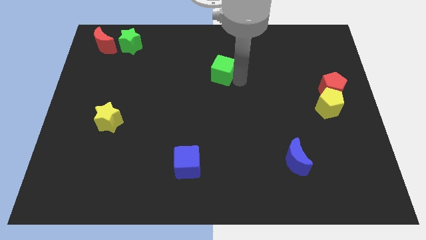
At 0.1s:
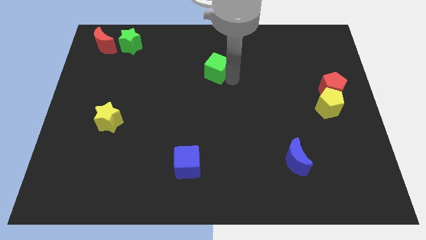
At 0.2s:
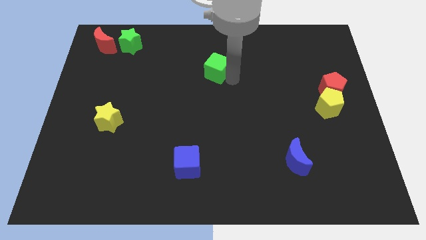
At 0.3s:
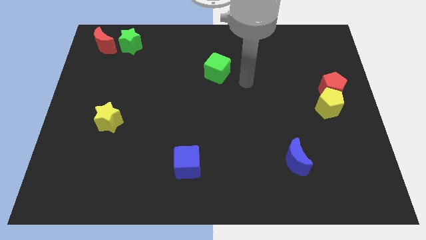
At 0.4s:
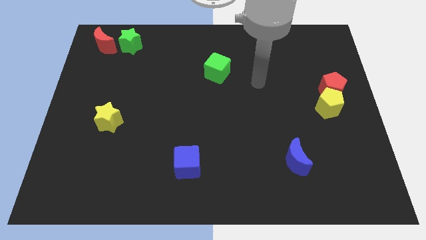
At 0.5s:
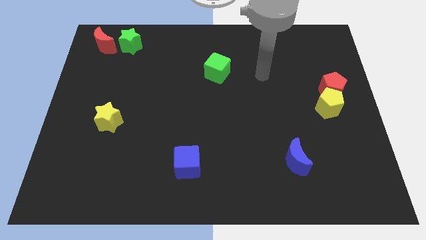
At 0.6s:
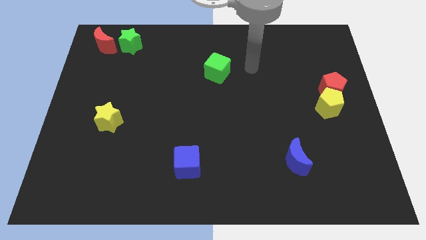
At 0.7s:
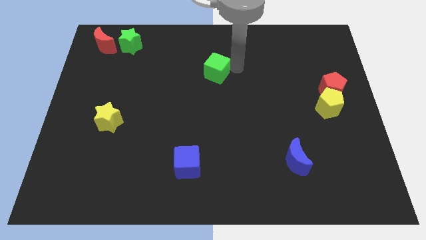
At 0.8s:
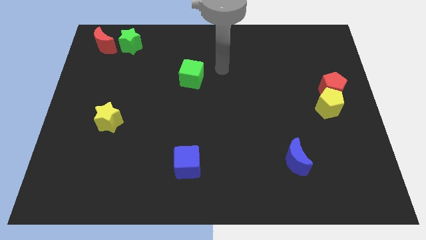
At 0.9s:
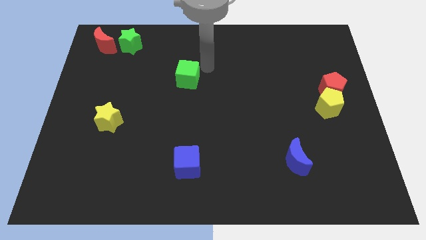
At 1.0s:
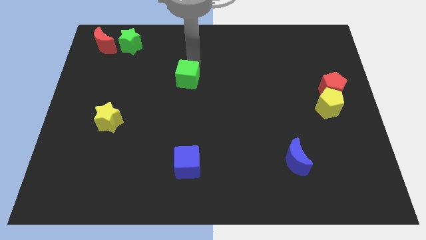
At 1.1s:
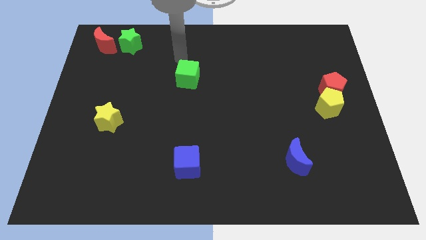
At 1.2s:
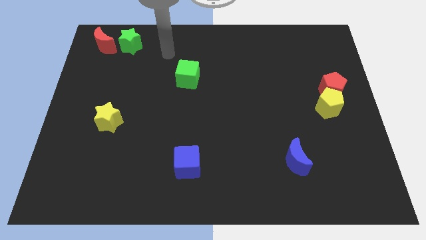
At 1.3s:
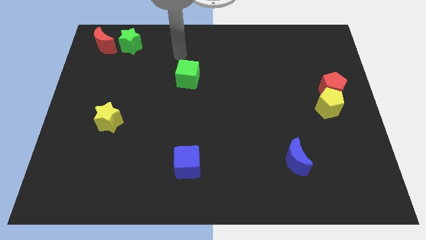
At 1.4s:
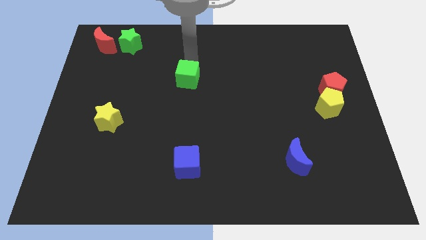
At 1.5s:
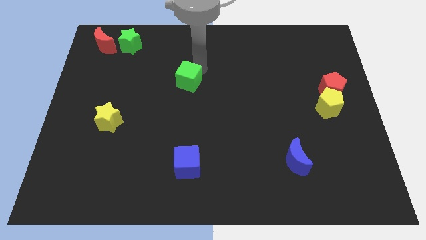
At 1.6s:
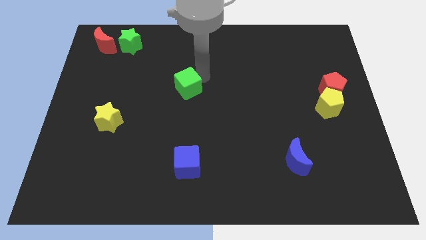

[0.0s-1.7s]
move the green cube on the top of blue cube

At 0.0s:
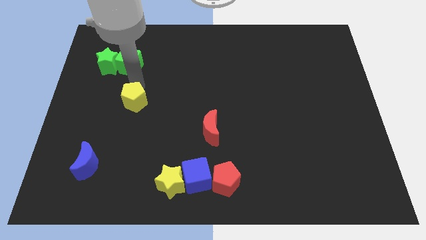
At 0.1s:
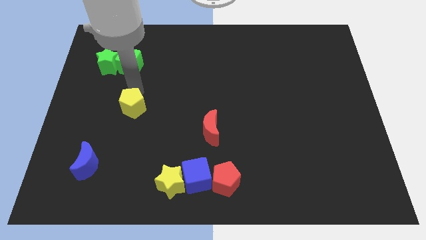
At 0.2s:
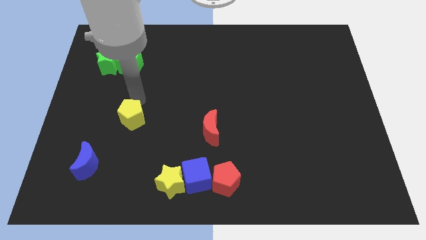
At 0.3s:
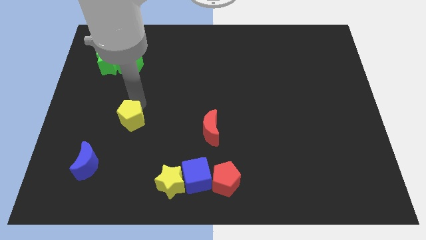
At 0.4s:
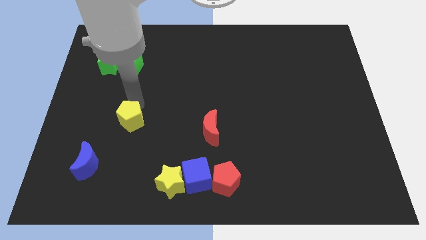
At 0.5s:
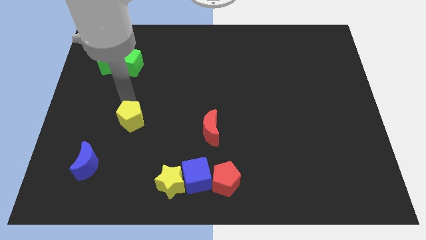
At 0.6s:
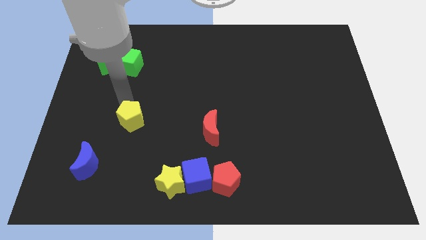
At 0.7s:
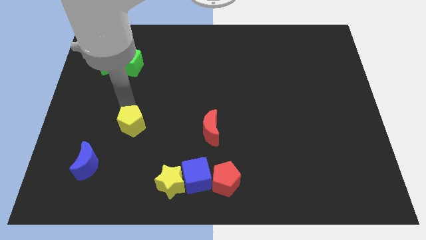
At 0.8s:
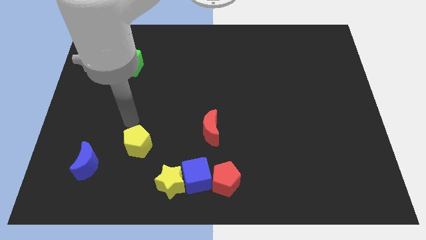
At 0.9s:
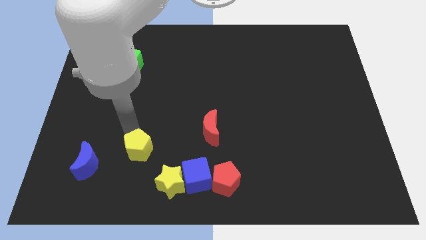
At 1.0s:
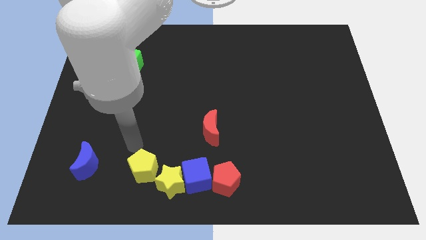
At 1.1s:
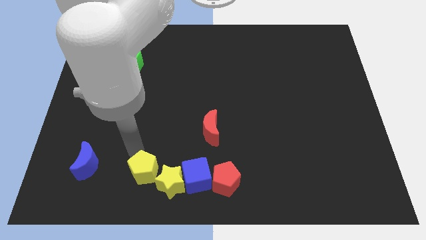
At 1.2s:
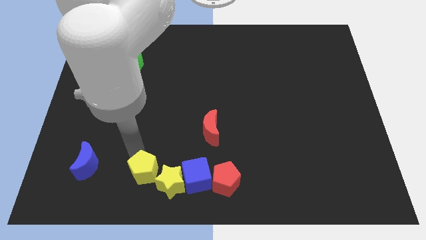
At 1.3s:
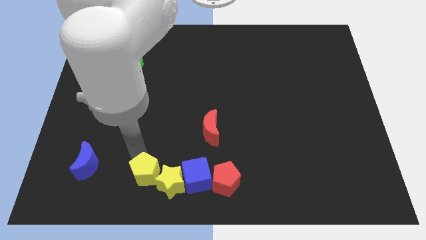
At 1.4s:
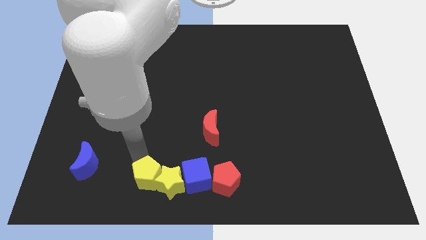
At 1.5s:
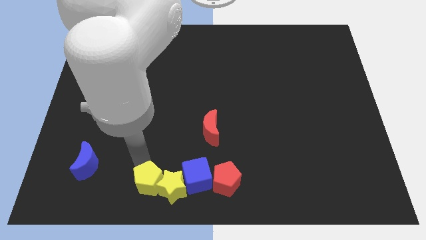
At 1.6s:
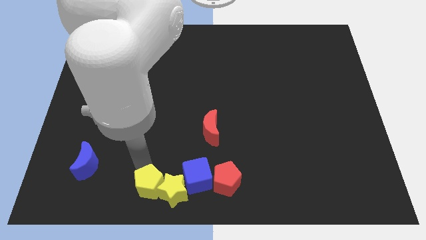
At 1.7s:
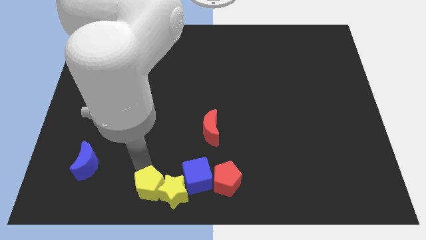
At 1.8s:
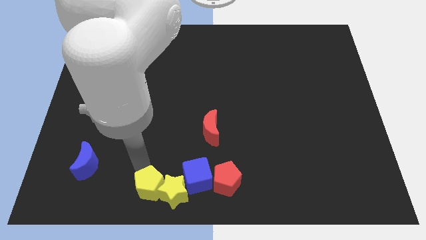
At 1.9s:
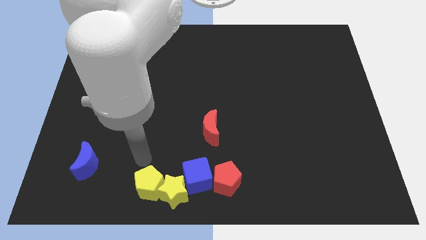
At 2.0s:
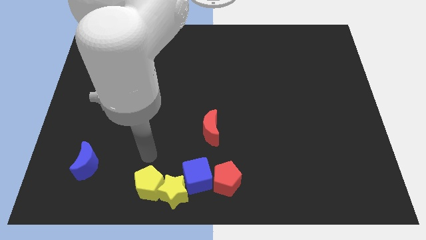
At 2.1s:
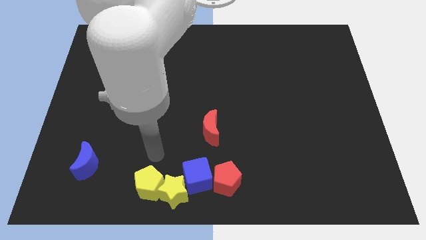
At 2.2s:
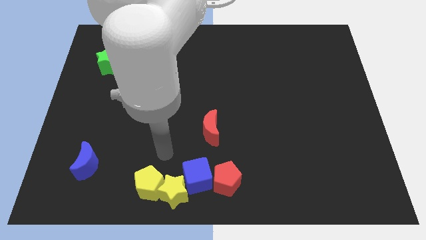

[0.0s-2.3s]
push the yellow pentagon into the star towards the bottom center of the board

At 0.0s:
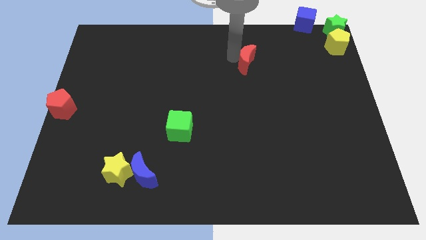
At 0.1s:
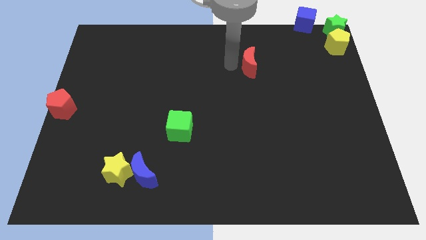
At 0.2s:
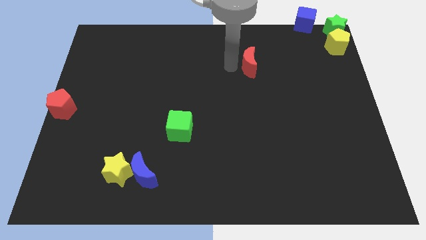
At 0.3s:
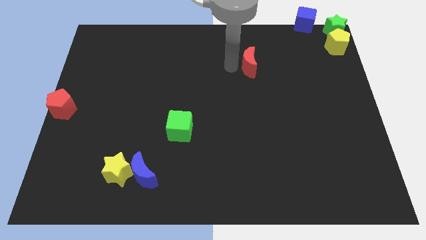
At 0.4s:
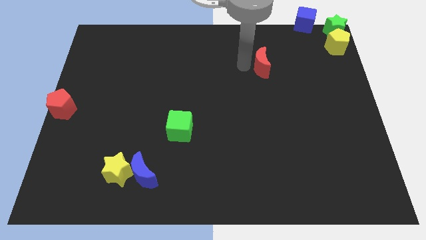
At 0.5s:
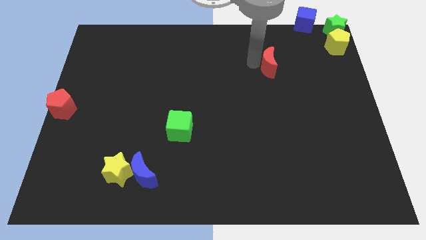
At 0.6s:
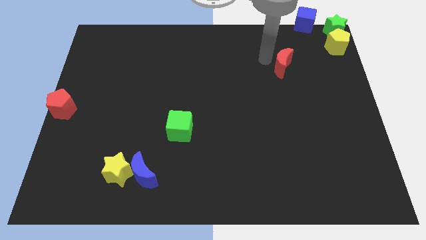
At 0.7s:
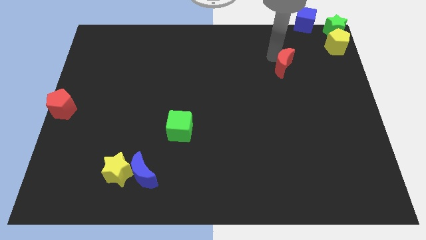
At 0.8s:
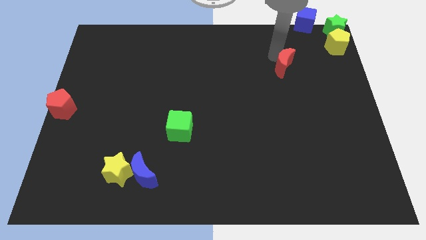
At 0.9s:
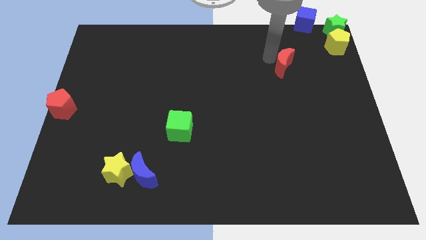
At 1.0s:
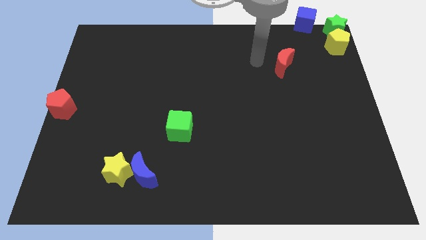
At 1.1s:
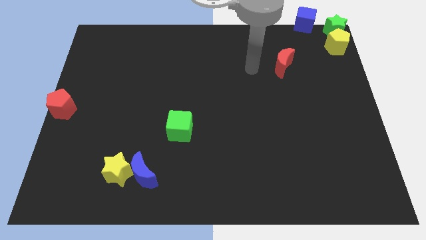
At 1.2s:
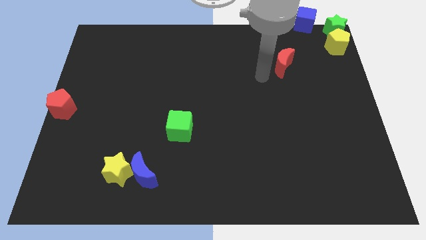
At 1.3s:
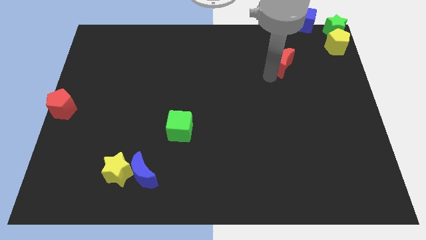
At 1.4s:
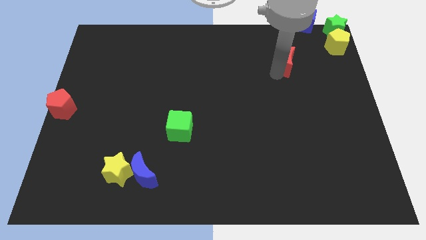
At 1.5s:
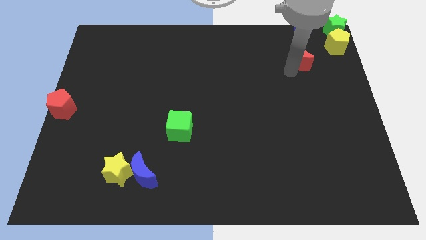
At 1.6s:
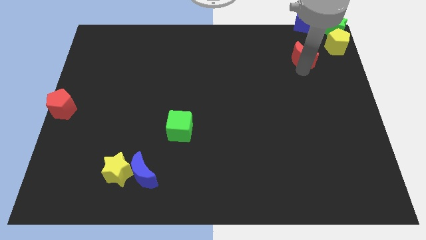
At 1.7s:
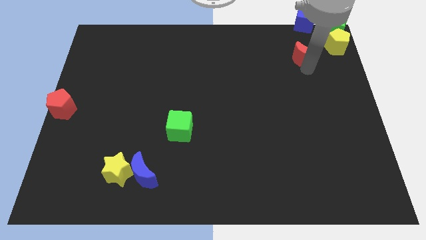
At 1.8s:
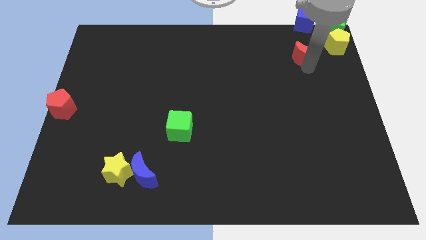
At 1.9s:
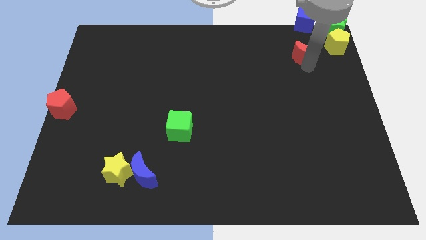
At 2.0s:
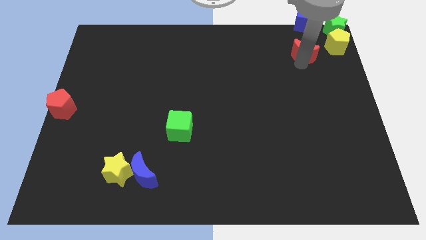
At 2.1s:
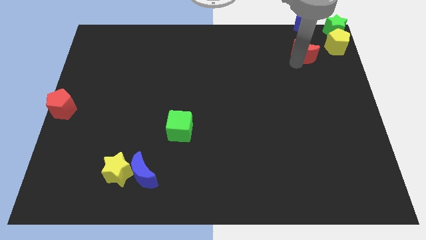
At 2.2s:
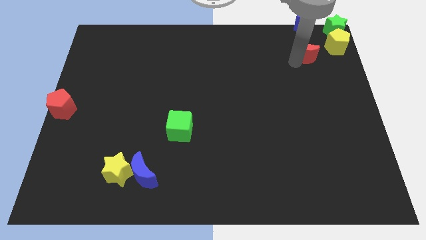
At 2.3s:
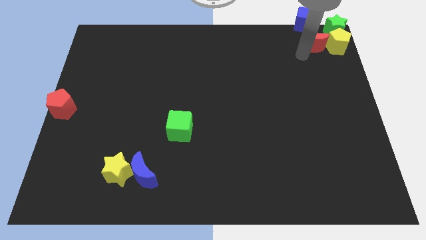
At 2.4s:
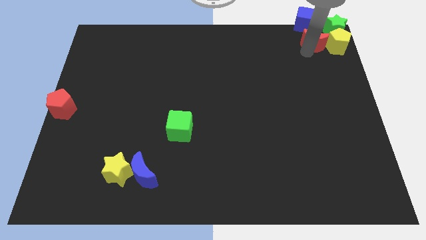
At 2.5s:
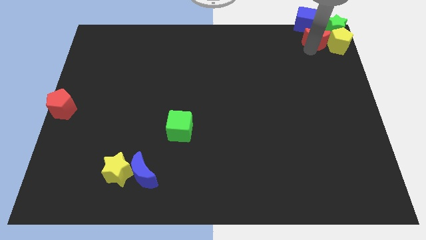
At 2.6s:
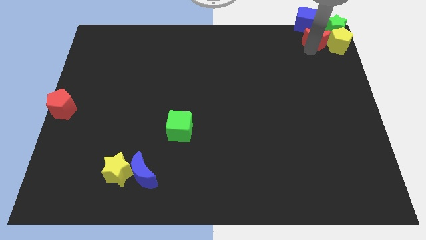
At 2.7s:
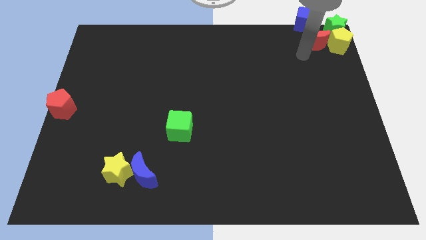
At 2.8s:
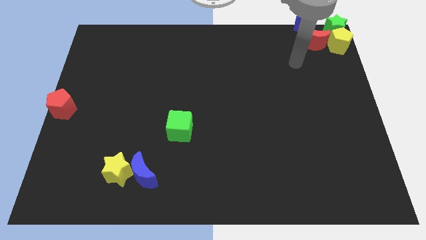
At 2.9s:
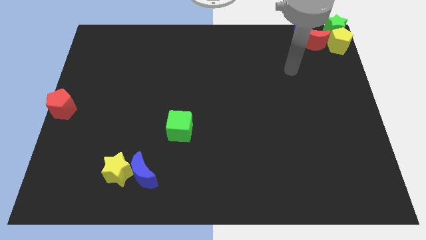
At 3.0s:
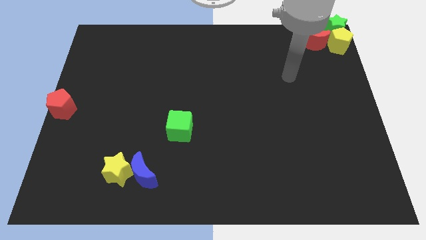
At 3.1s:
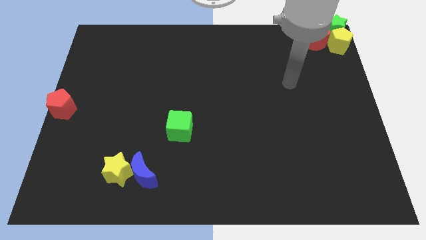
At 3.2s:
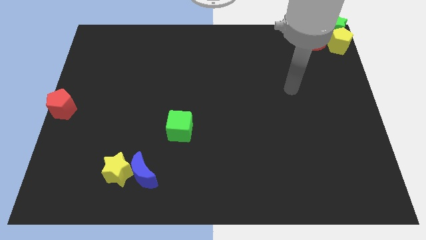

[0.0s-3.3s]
put the red crescent to the left side of the yellow pentagon

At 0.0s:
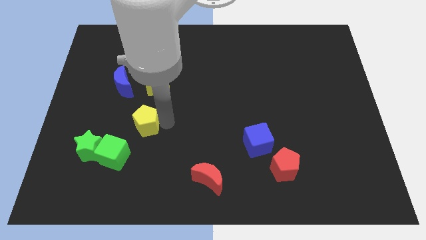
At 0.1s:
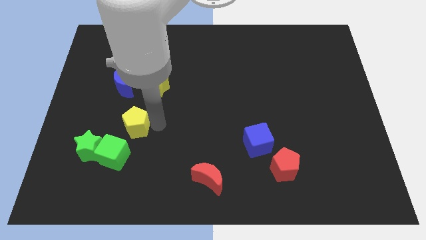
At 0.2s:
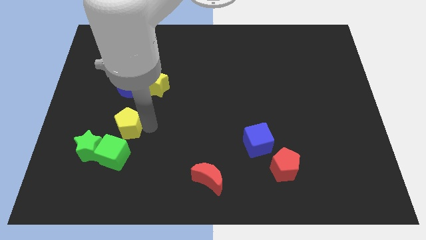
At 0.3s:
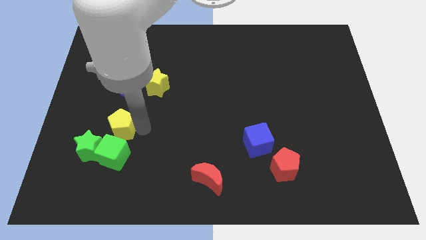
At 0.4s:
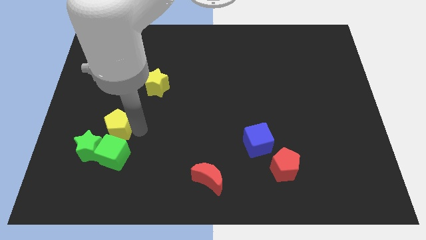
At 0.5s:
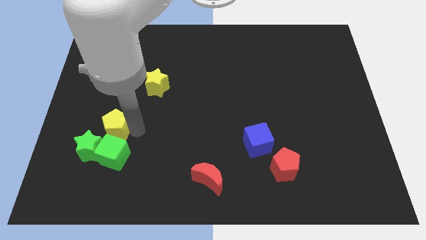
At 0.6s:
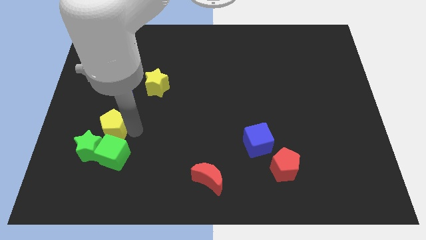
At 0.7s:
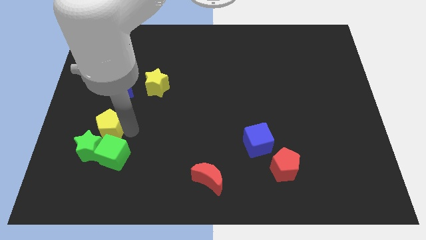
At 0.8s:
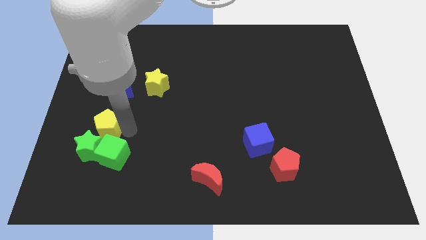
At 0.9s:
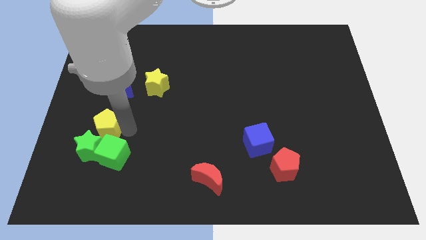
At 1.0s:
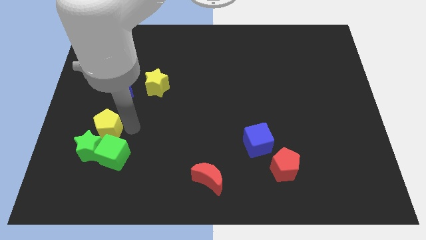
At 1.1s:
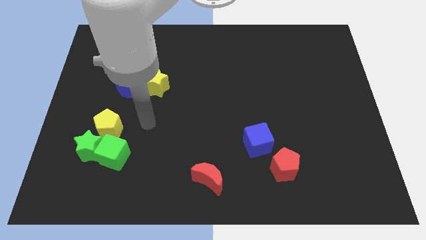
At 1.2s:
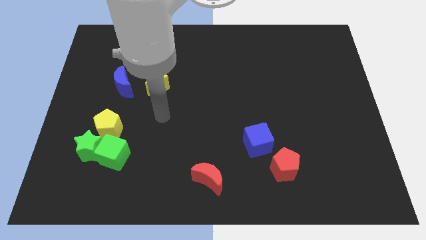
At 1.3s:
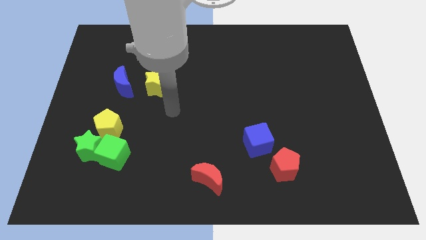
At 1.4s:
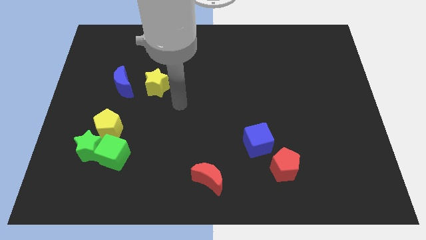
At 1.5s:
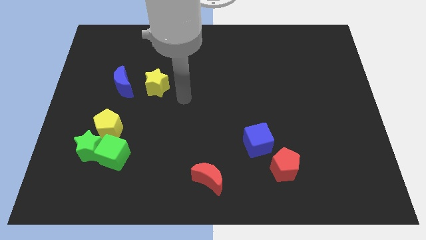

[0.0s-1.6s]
move the yellow pentagon to the top right of the green star

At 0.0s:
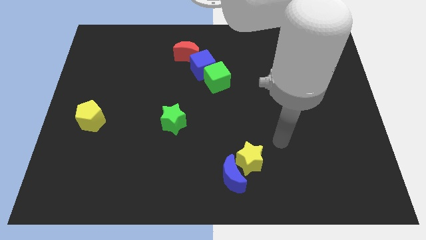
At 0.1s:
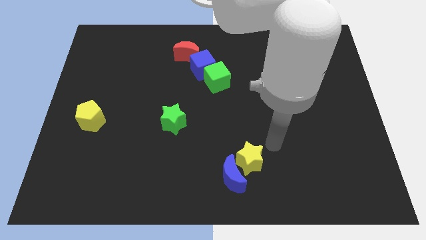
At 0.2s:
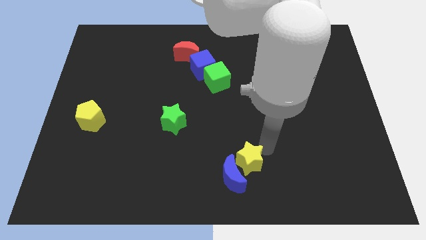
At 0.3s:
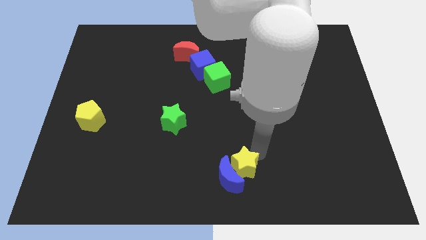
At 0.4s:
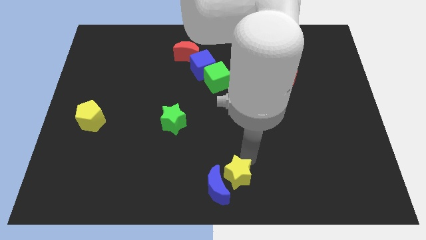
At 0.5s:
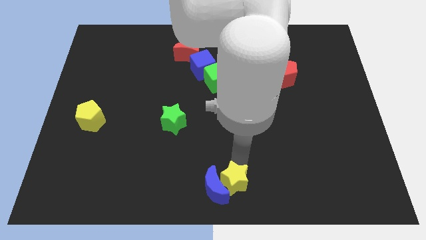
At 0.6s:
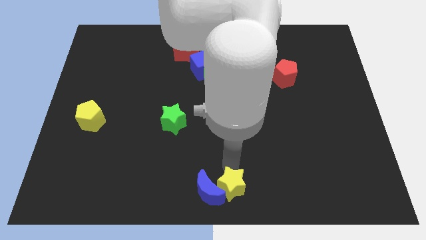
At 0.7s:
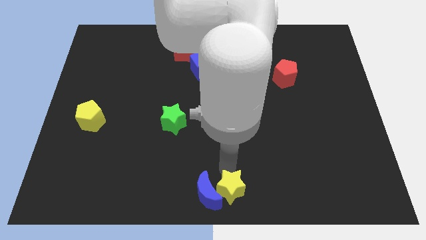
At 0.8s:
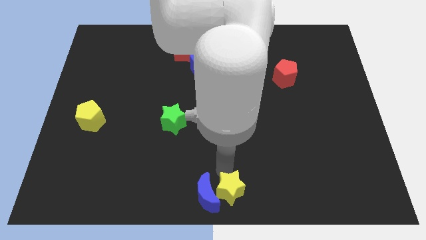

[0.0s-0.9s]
place yellow star and blue crescent at the bottom center of the board
